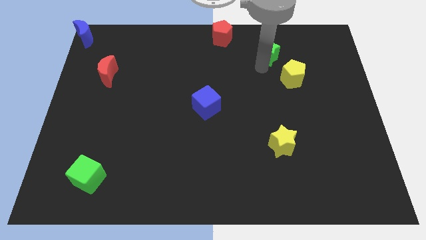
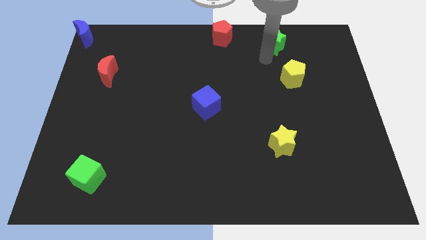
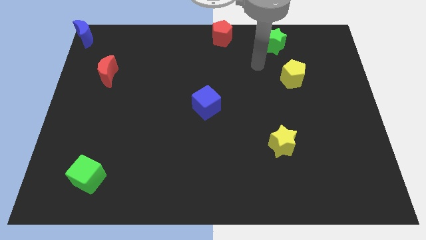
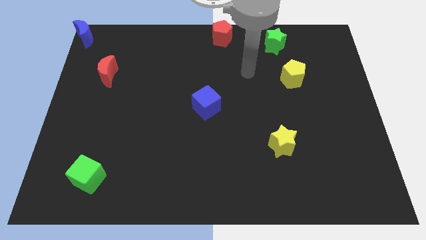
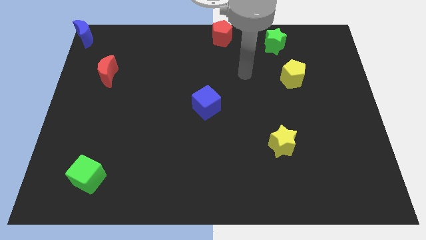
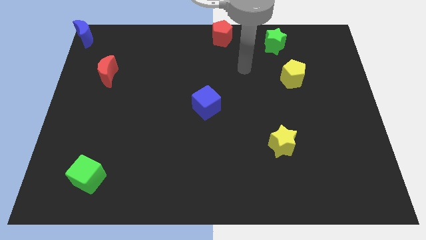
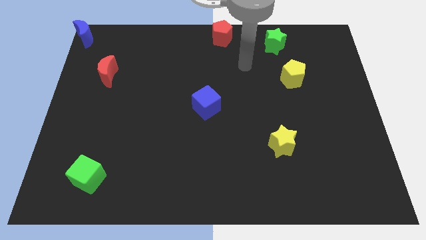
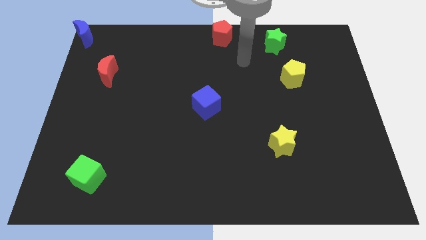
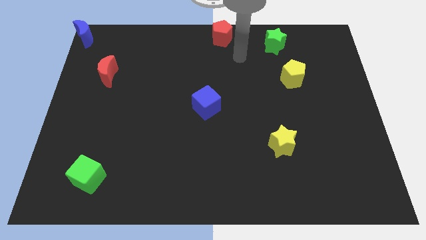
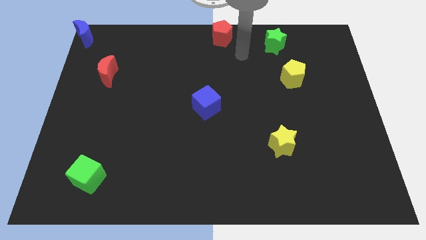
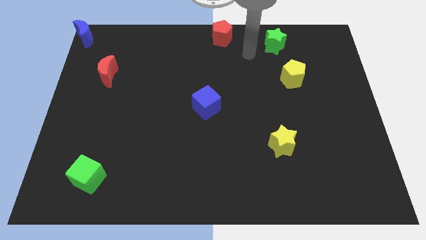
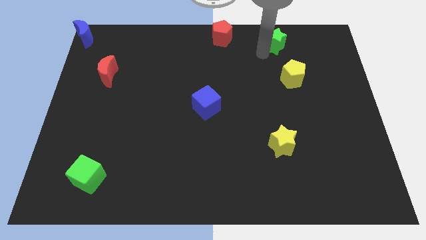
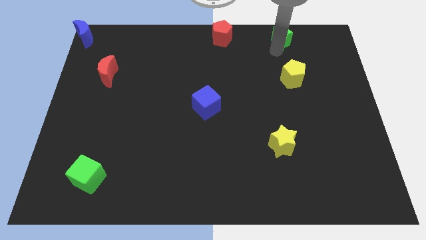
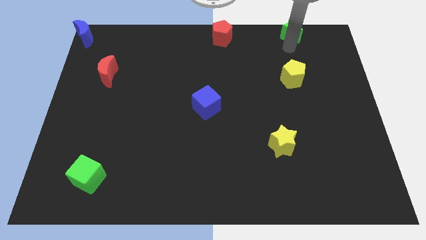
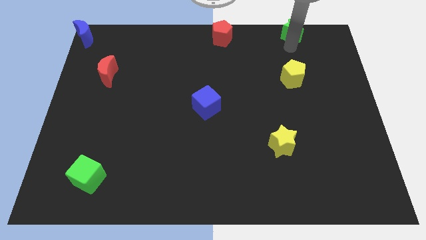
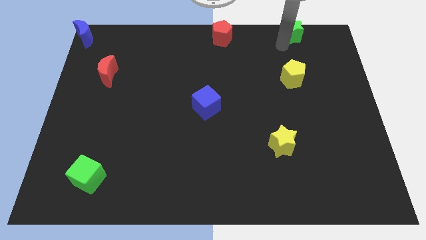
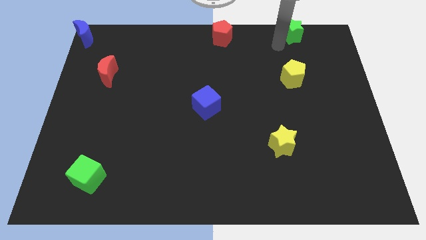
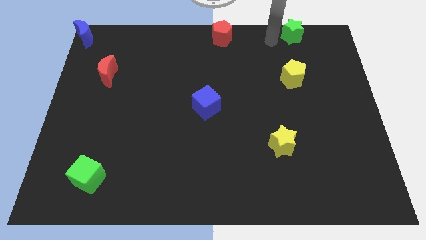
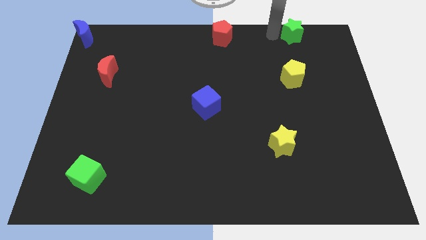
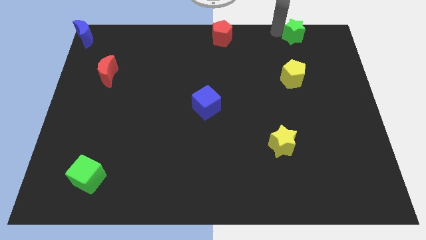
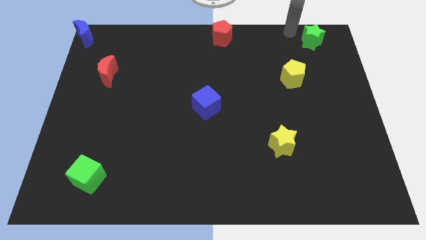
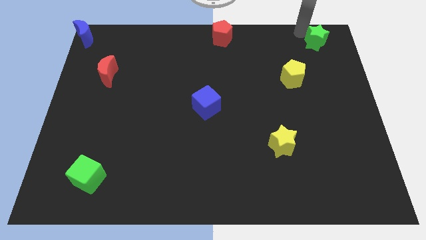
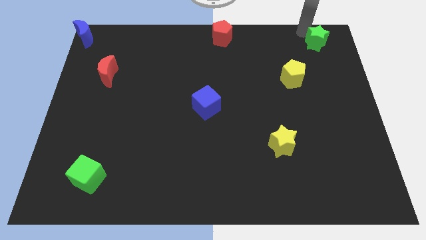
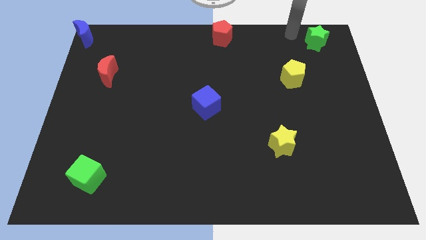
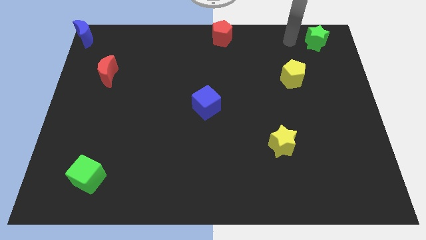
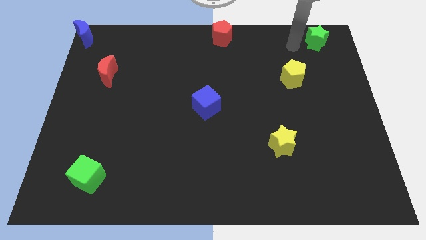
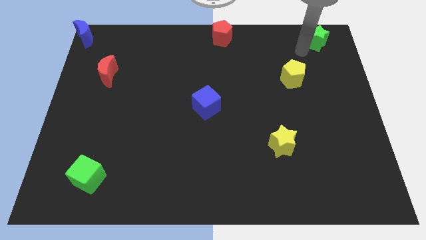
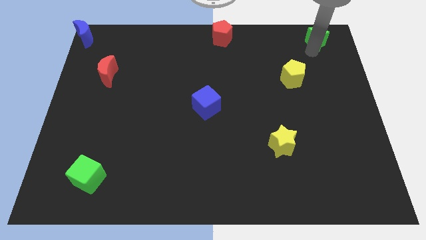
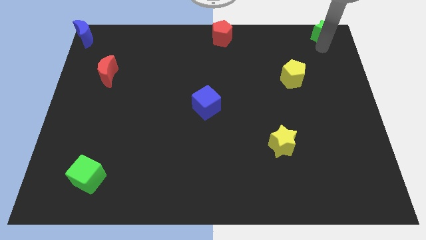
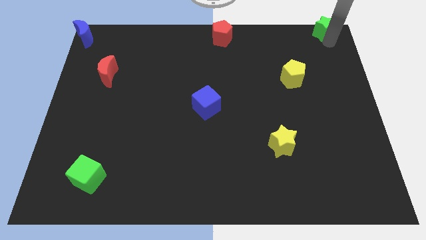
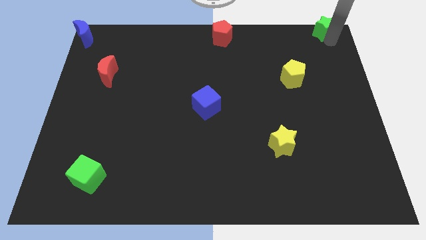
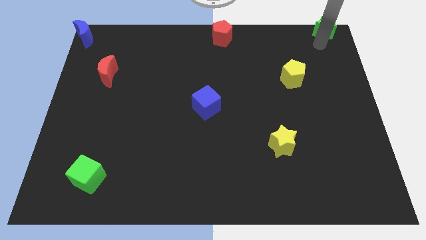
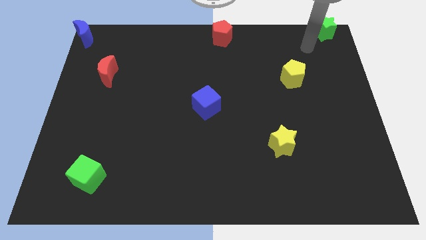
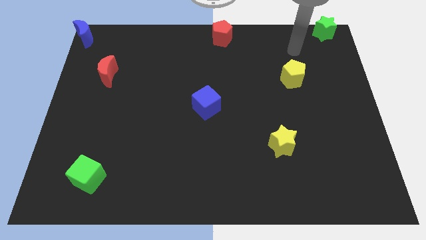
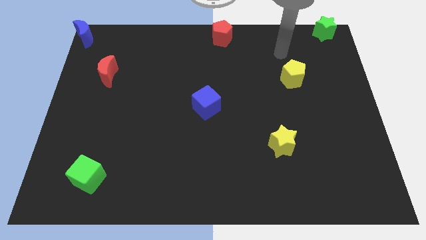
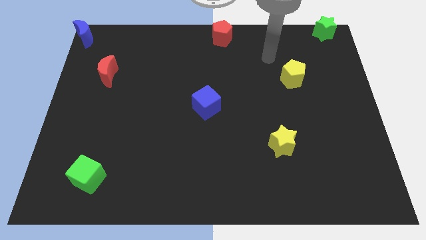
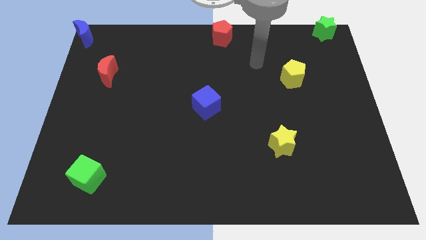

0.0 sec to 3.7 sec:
move the green star to the top right corner of the board

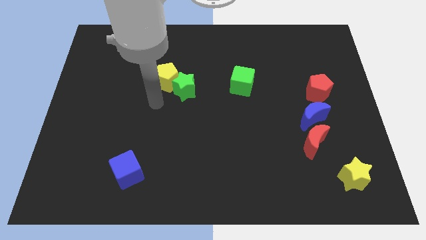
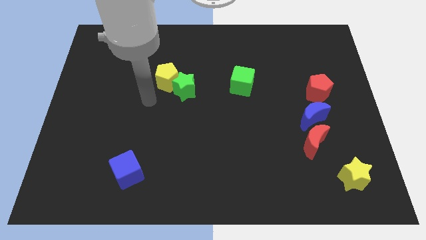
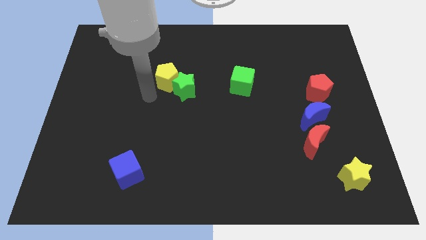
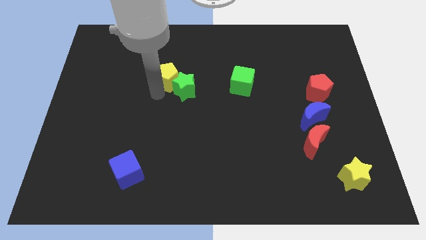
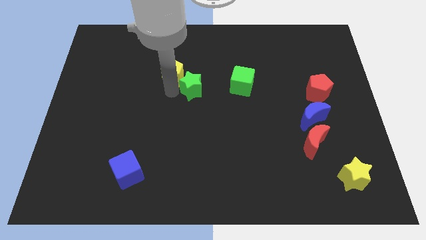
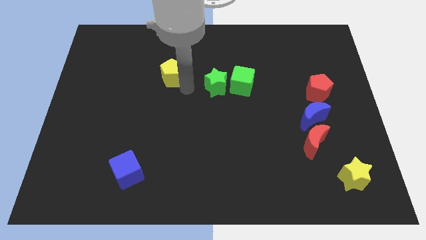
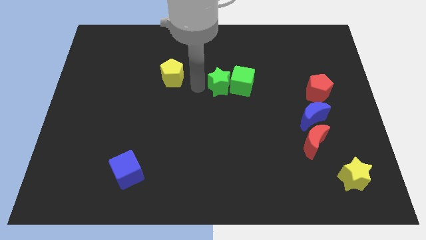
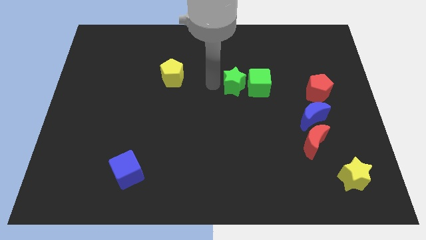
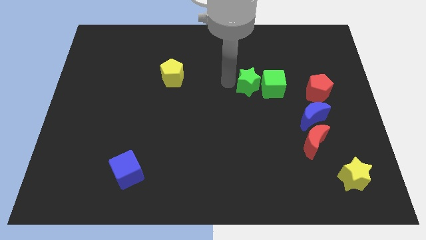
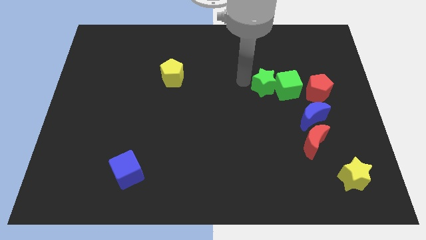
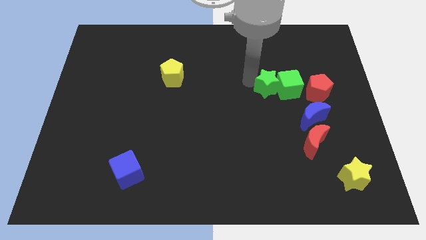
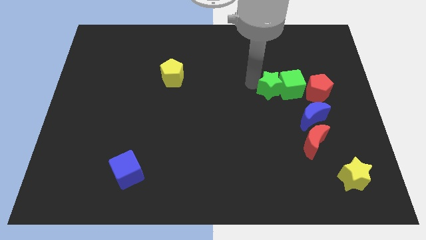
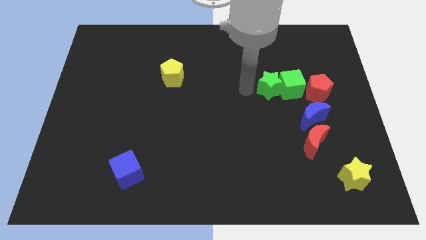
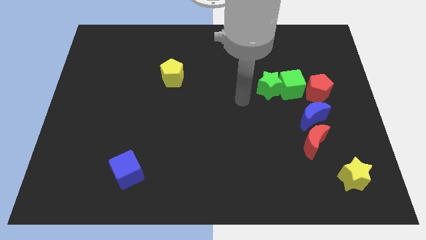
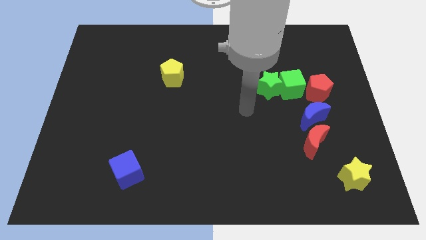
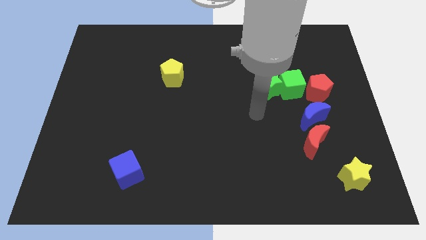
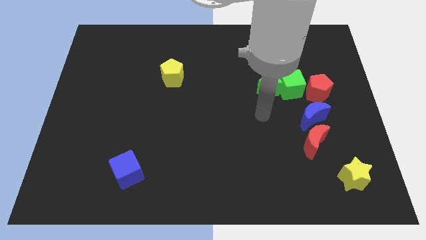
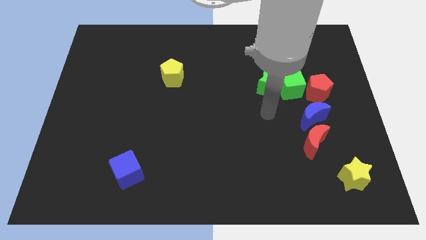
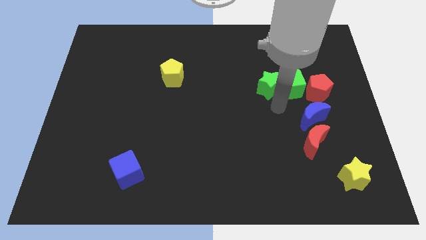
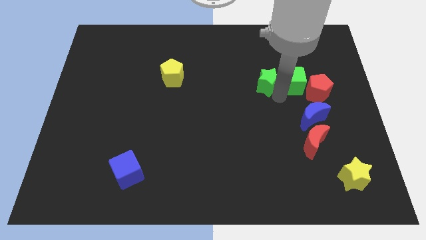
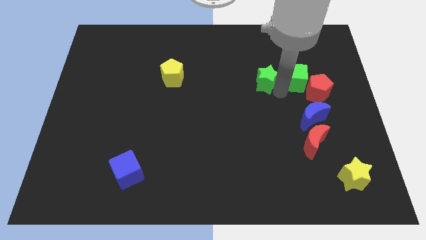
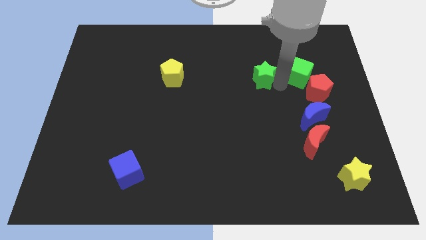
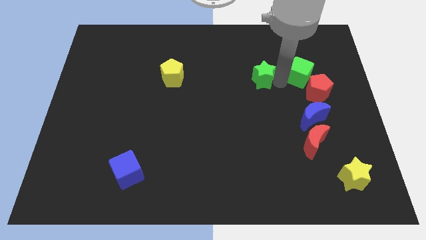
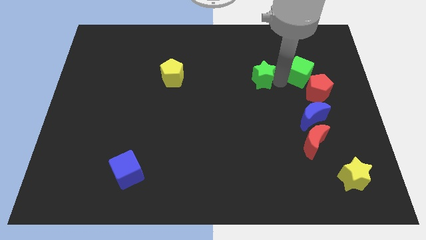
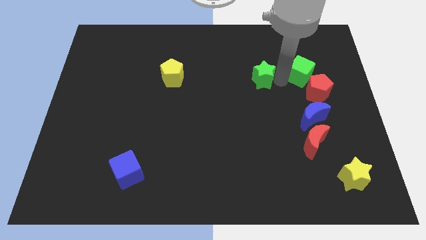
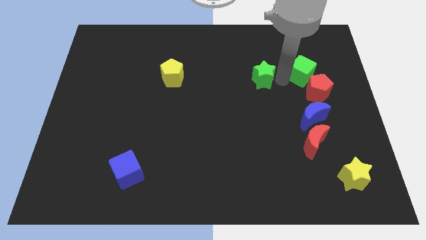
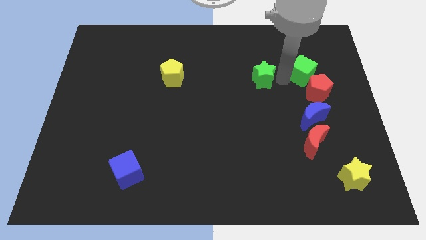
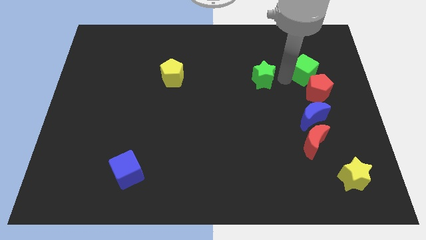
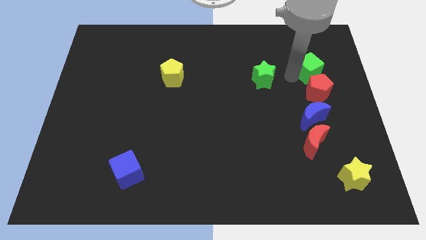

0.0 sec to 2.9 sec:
push green star and green cube towards right

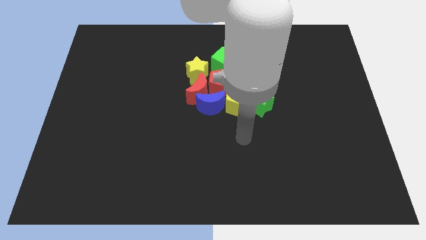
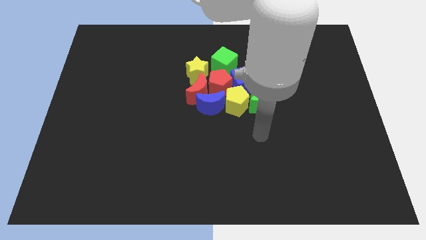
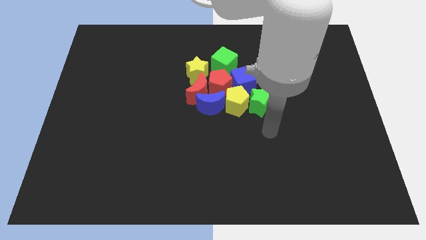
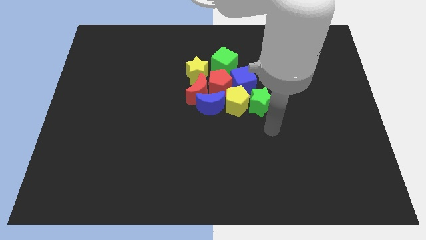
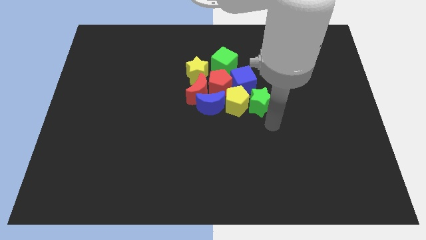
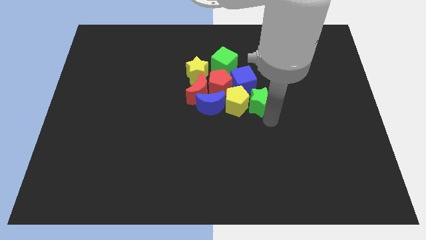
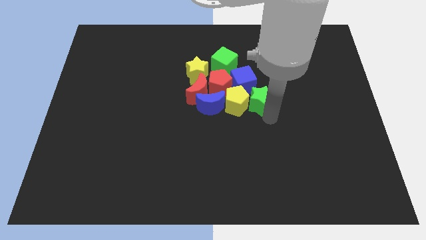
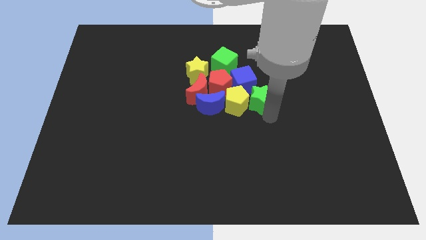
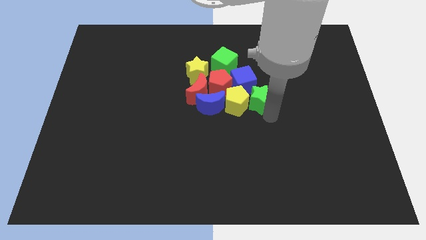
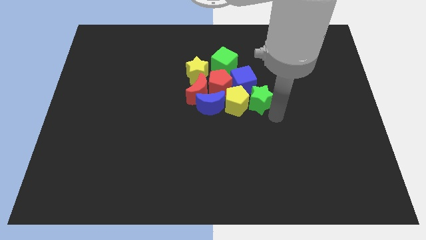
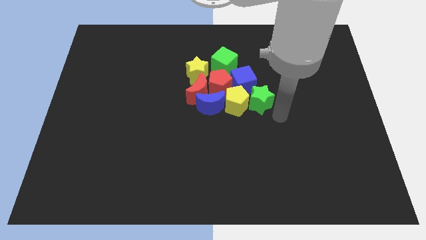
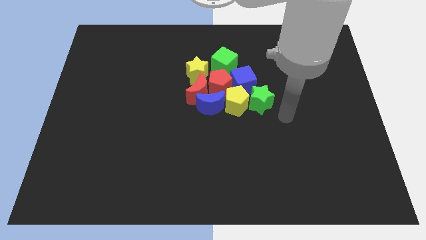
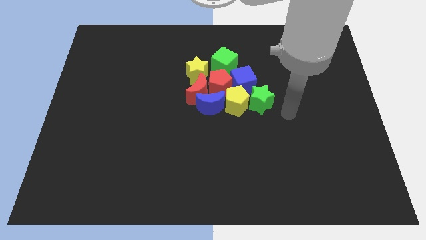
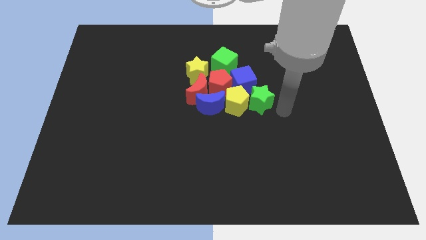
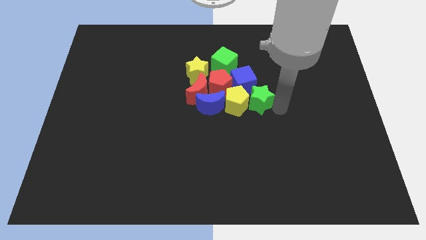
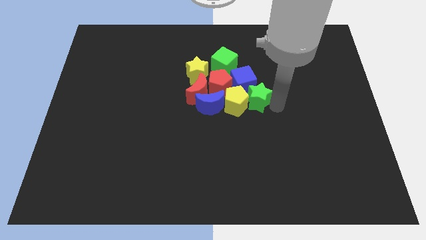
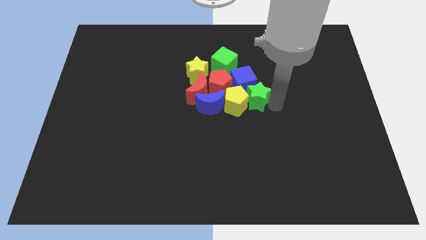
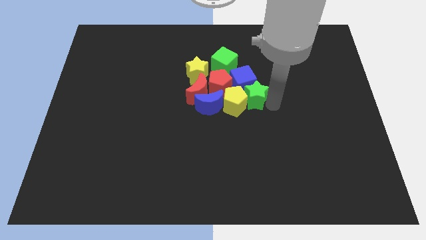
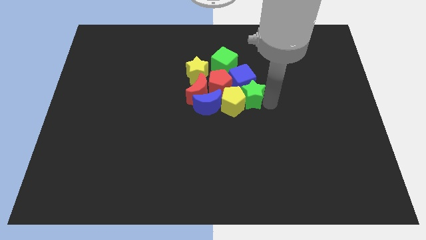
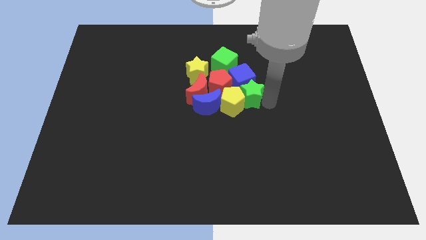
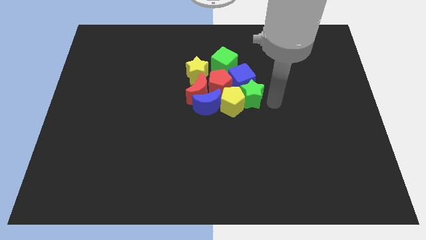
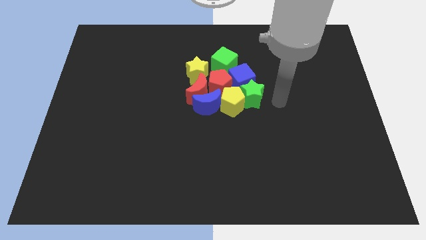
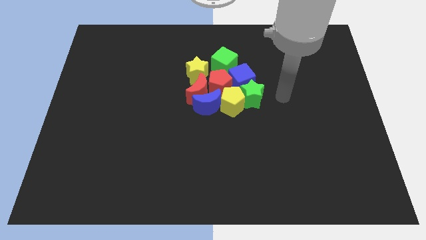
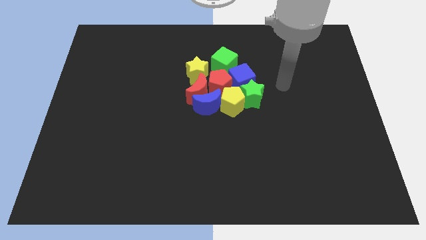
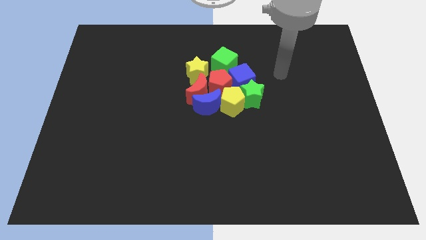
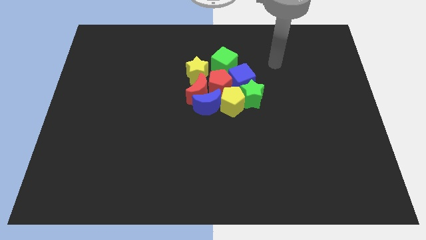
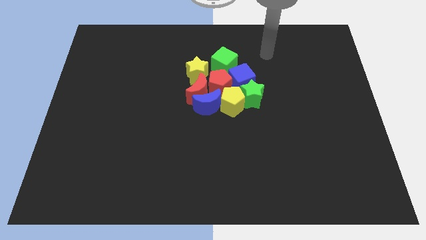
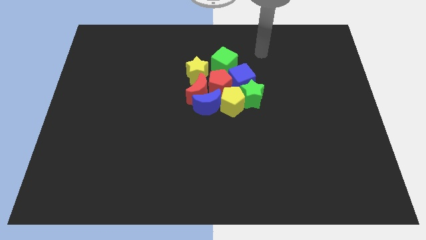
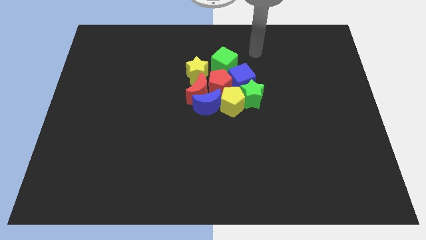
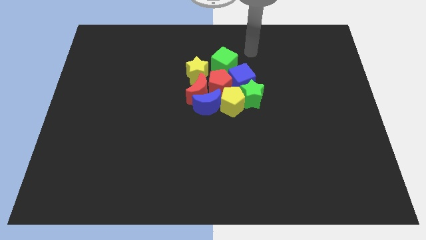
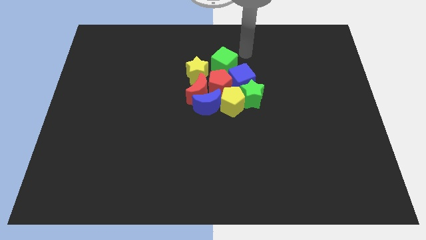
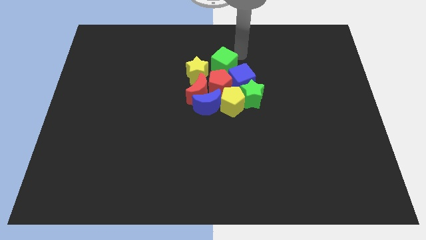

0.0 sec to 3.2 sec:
push the green star into the group of blocks
